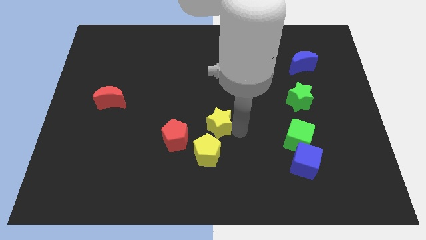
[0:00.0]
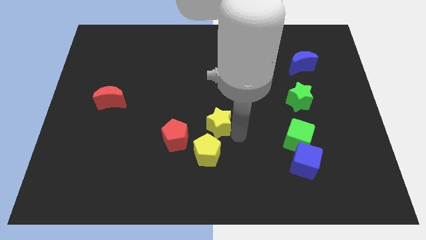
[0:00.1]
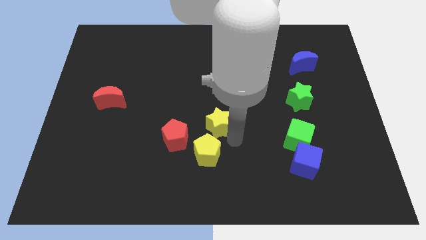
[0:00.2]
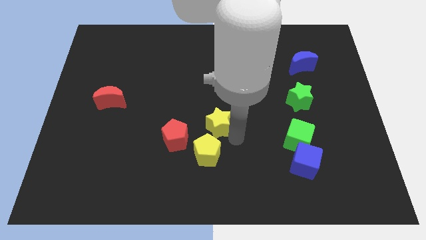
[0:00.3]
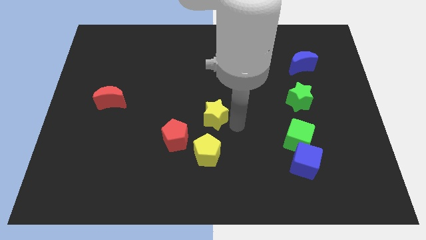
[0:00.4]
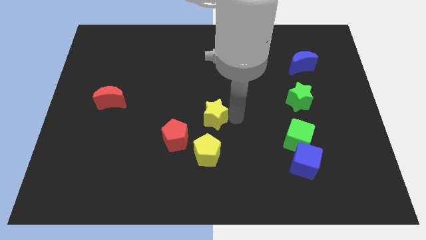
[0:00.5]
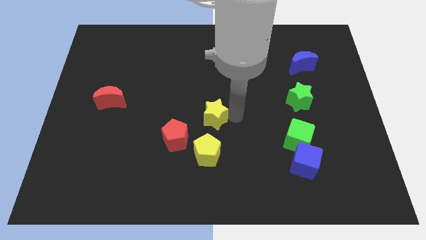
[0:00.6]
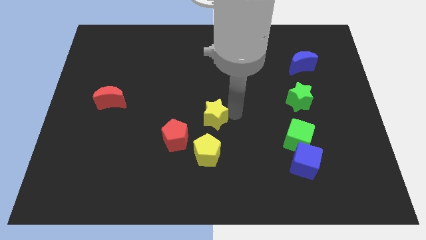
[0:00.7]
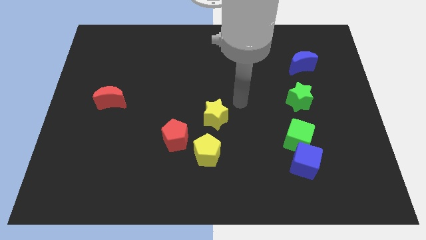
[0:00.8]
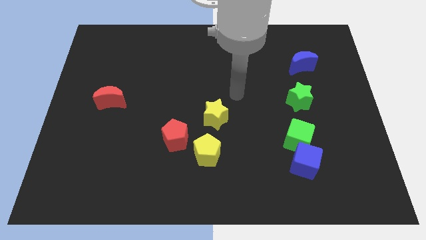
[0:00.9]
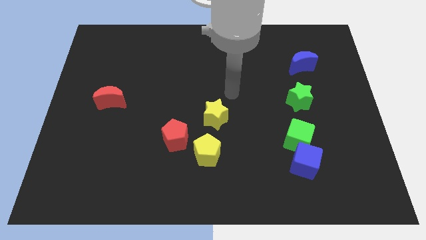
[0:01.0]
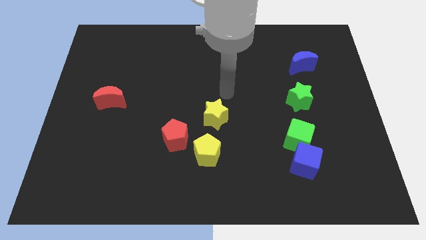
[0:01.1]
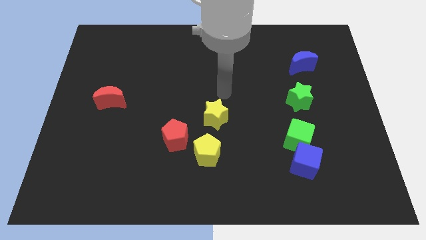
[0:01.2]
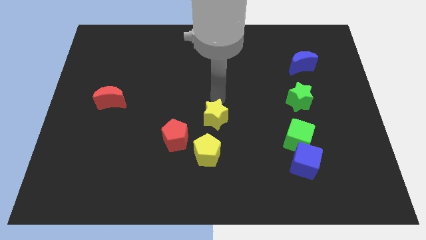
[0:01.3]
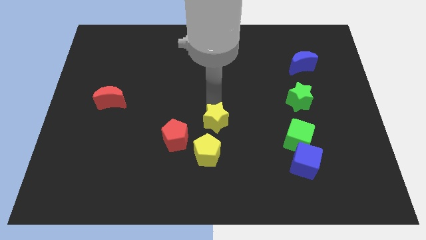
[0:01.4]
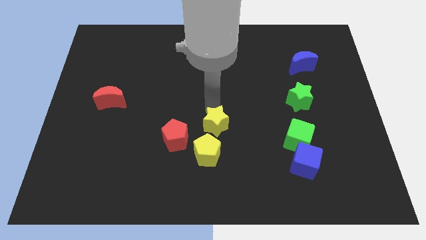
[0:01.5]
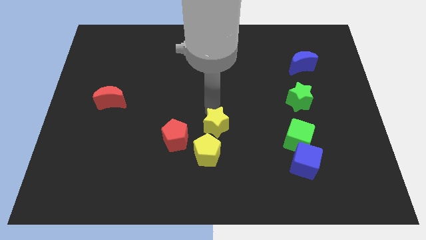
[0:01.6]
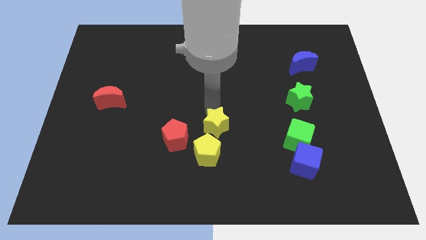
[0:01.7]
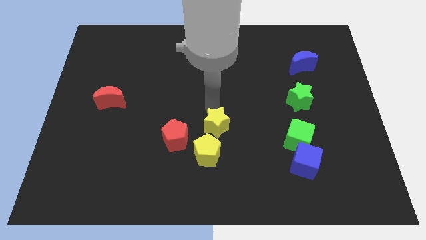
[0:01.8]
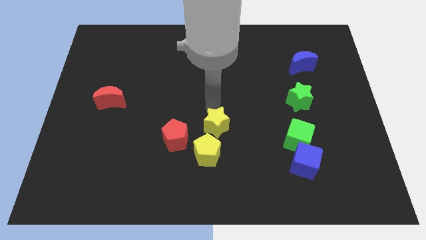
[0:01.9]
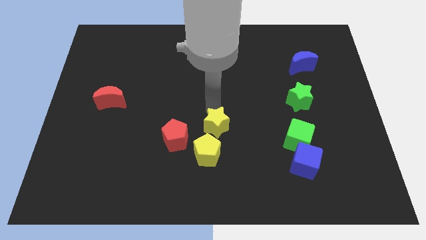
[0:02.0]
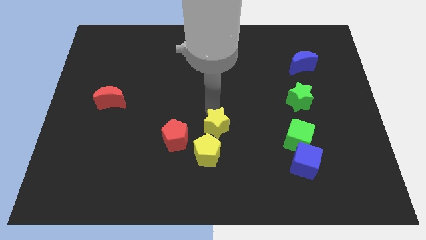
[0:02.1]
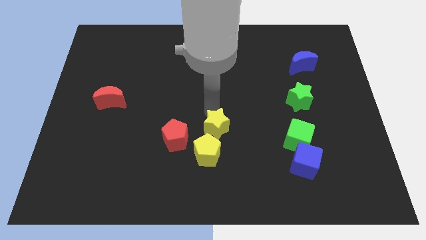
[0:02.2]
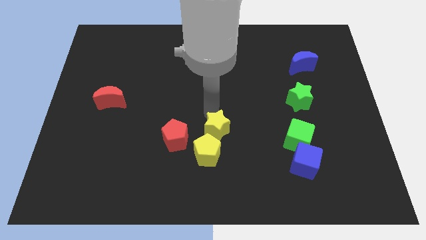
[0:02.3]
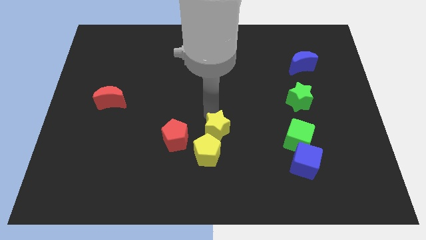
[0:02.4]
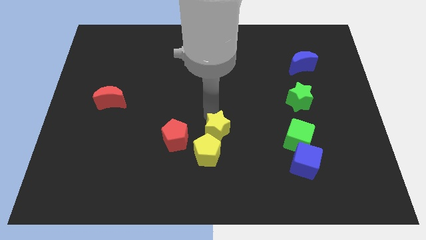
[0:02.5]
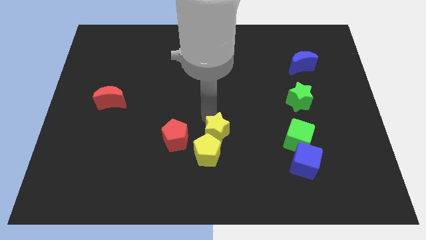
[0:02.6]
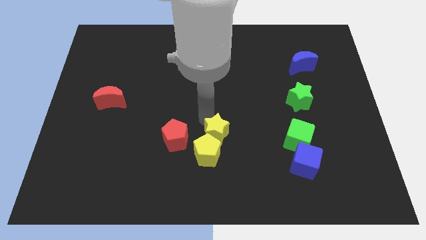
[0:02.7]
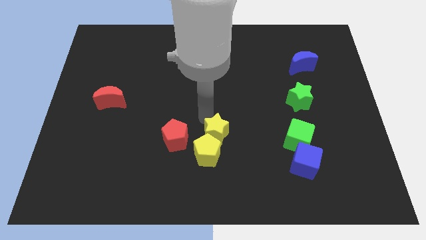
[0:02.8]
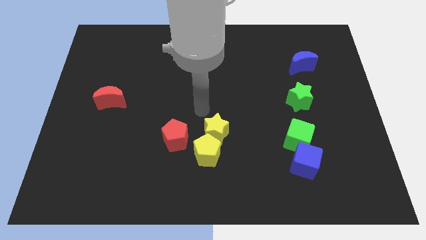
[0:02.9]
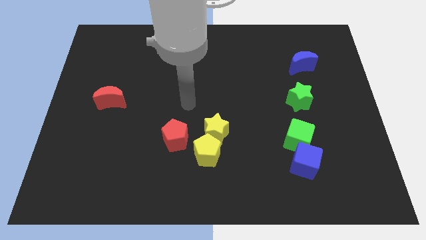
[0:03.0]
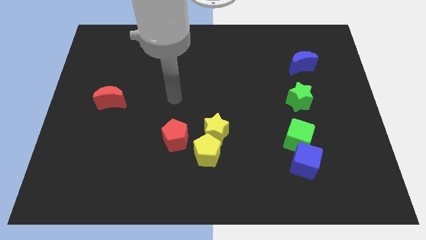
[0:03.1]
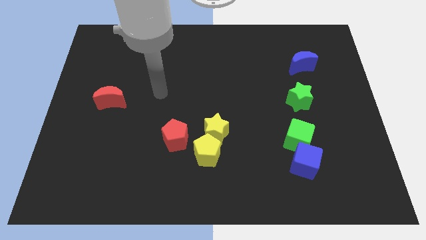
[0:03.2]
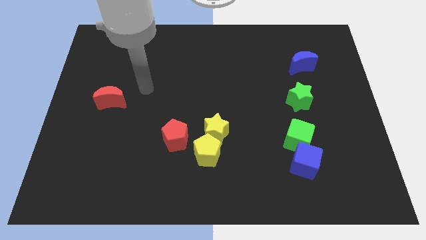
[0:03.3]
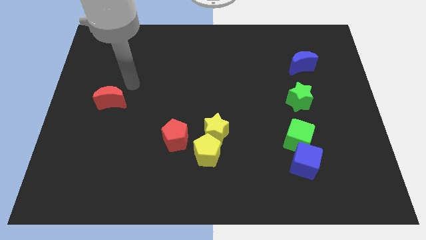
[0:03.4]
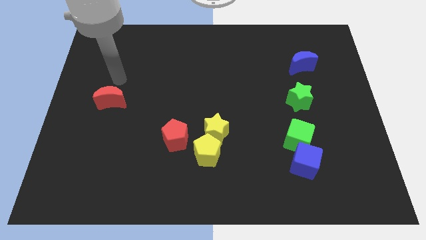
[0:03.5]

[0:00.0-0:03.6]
point your arm to the top of the red moon

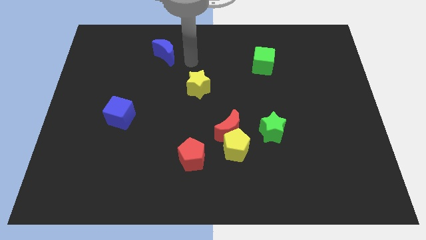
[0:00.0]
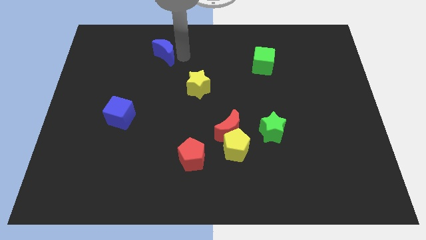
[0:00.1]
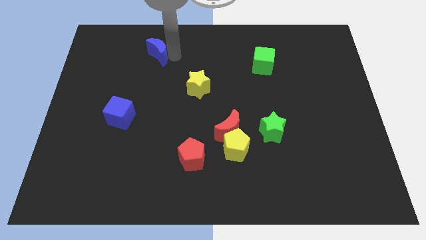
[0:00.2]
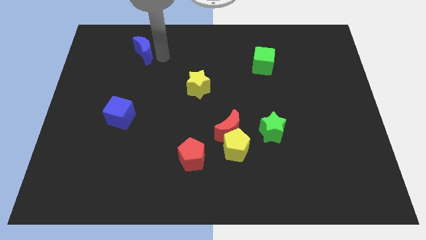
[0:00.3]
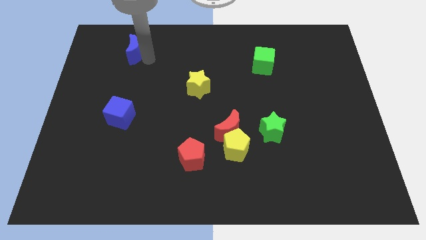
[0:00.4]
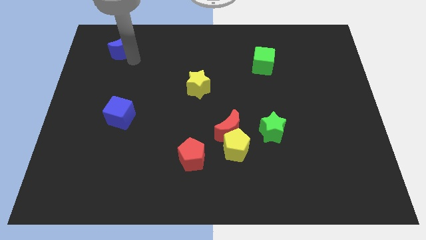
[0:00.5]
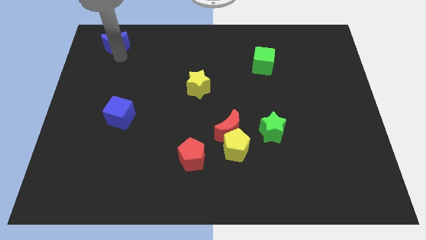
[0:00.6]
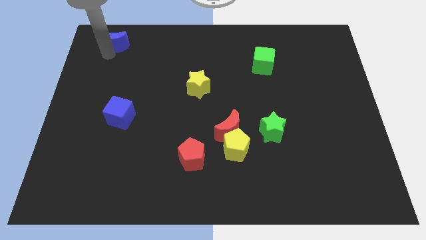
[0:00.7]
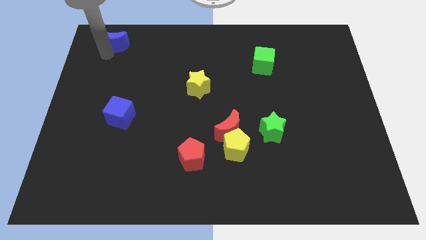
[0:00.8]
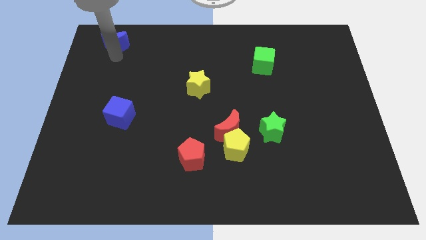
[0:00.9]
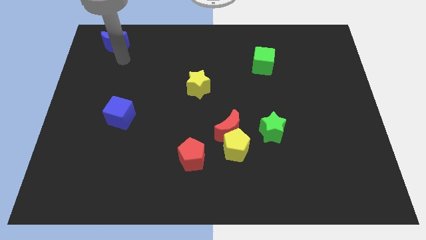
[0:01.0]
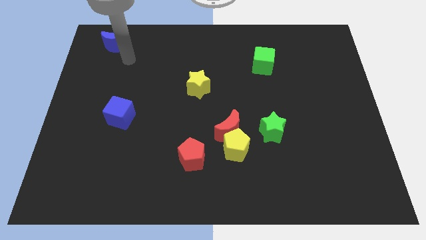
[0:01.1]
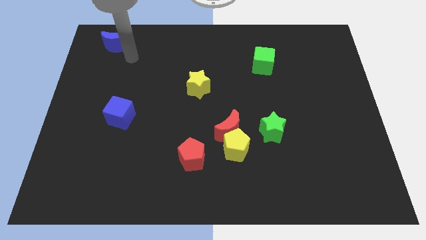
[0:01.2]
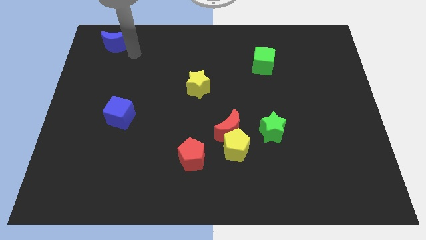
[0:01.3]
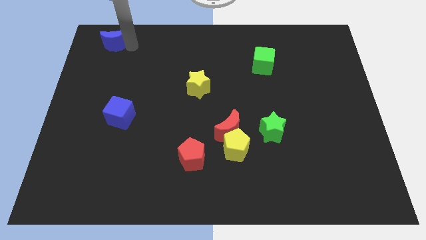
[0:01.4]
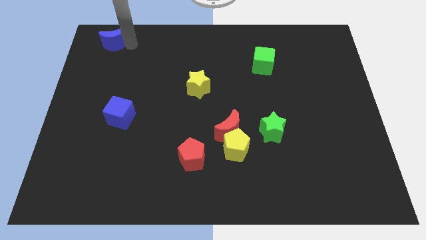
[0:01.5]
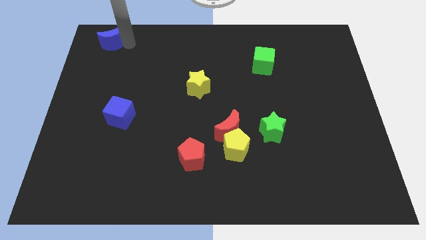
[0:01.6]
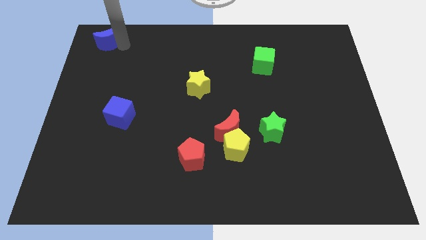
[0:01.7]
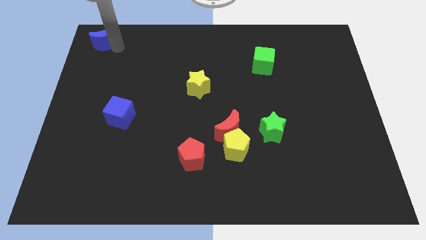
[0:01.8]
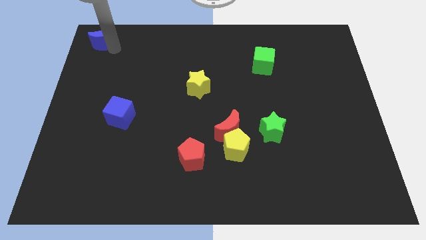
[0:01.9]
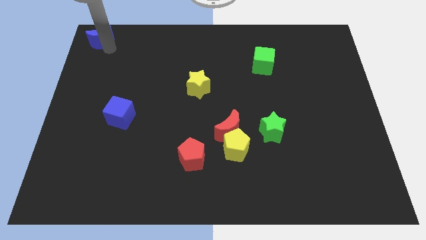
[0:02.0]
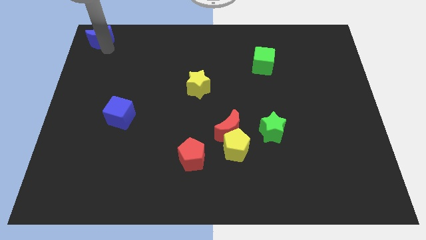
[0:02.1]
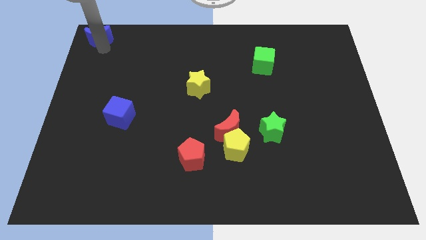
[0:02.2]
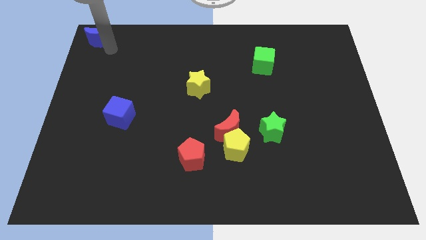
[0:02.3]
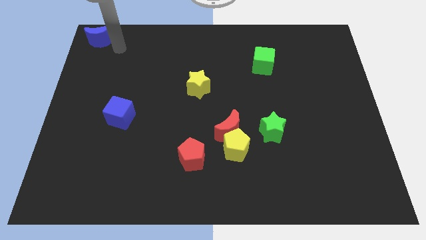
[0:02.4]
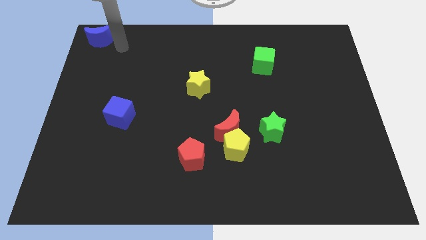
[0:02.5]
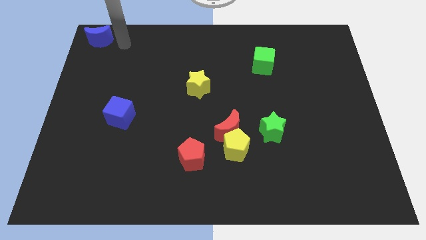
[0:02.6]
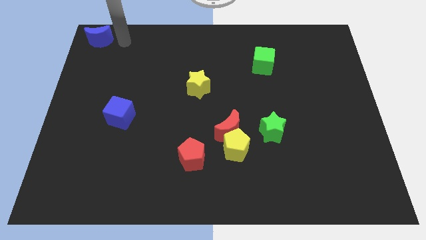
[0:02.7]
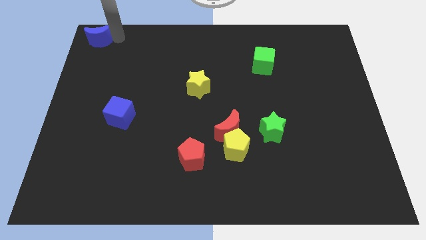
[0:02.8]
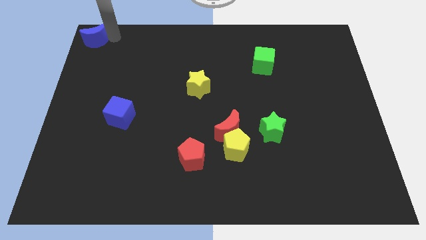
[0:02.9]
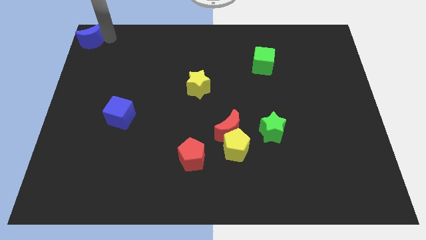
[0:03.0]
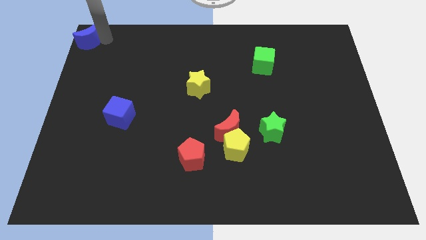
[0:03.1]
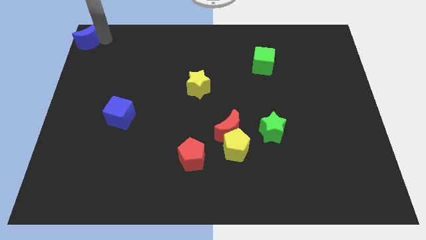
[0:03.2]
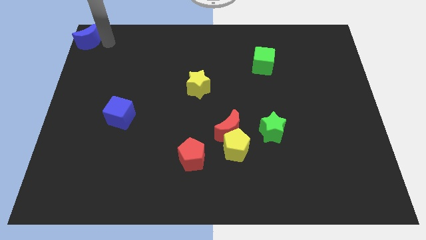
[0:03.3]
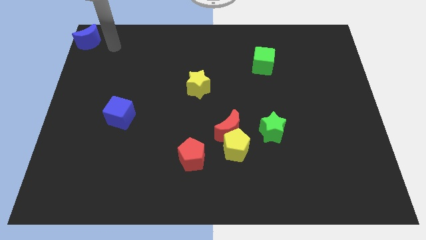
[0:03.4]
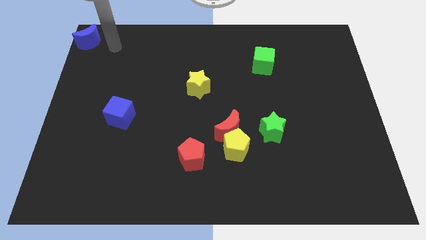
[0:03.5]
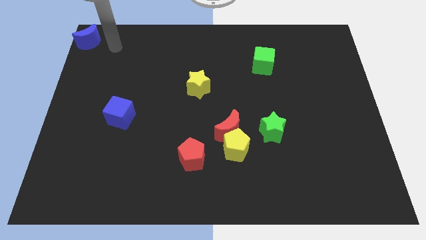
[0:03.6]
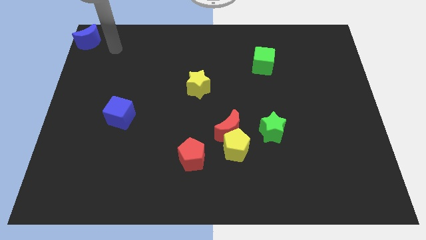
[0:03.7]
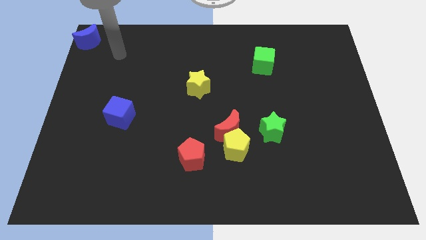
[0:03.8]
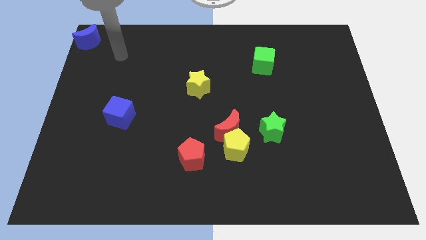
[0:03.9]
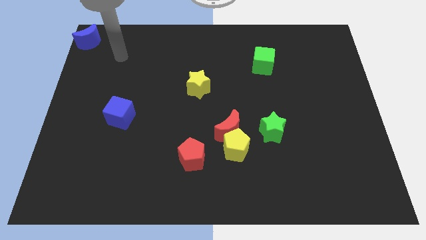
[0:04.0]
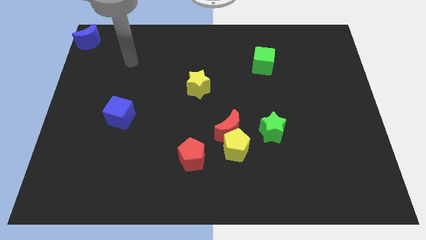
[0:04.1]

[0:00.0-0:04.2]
push the blue crescent to the top left corner of the board

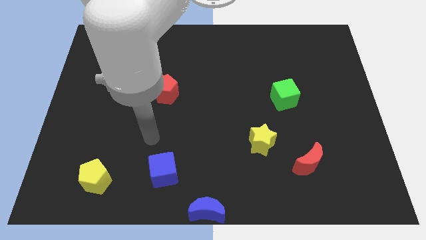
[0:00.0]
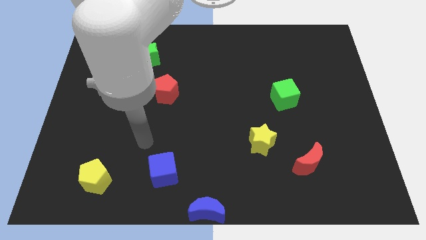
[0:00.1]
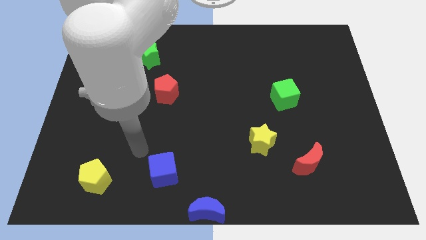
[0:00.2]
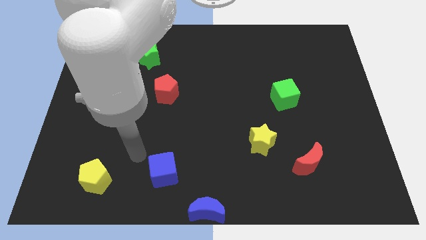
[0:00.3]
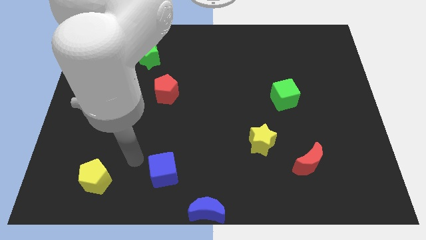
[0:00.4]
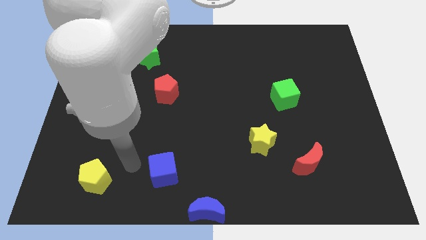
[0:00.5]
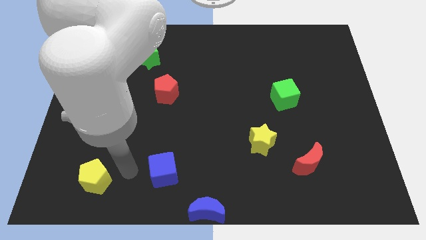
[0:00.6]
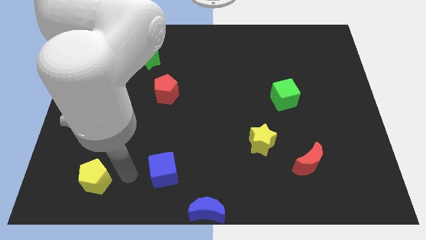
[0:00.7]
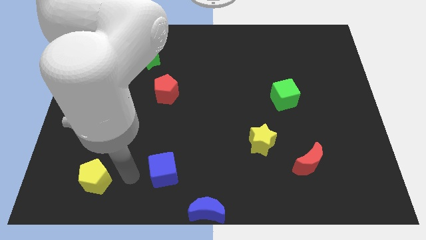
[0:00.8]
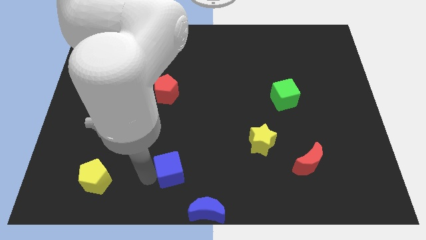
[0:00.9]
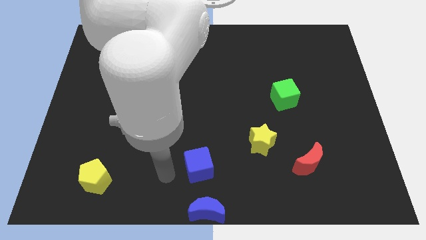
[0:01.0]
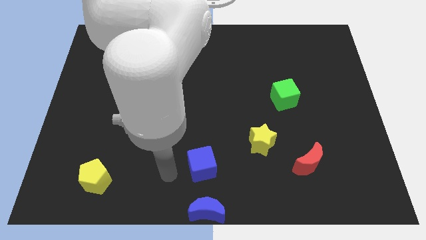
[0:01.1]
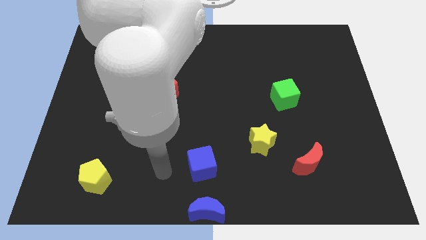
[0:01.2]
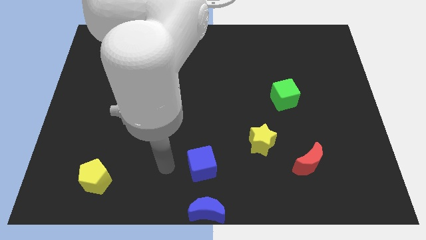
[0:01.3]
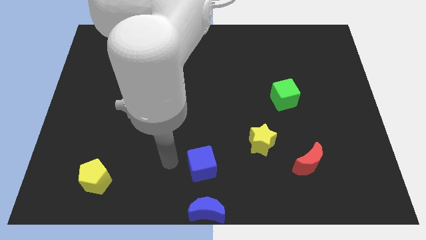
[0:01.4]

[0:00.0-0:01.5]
slightly move the blue cube to the right
